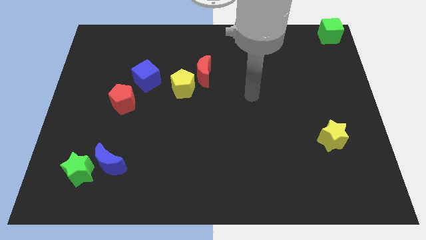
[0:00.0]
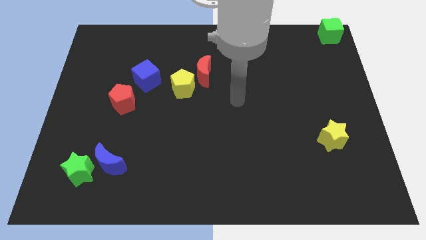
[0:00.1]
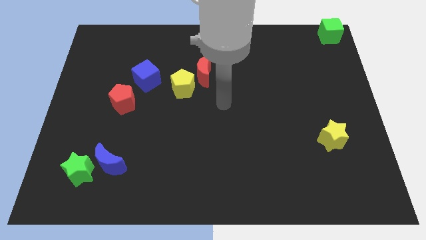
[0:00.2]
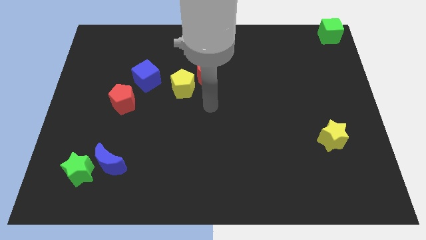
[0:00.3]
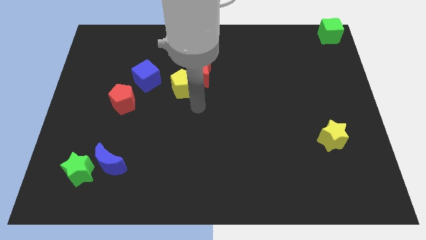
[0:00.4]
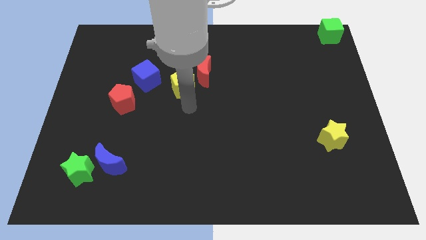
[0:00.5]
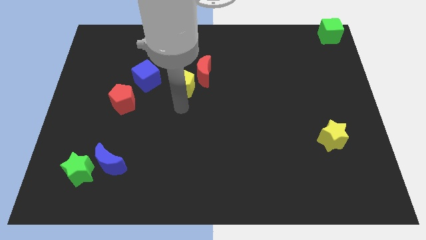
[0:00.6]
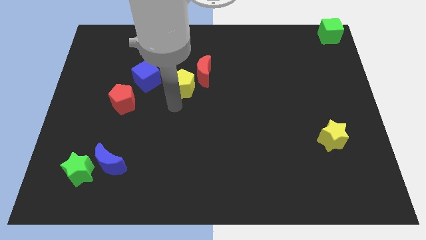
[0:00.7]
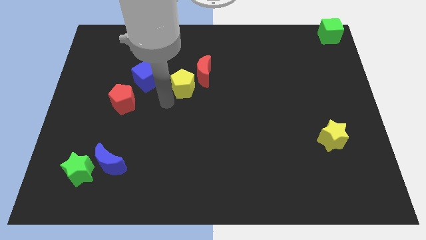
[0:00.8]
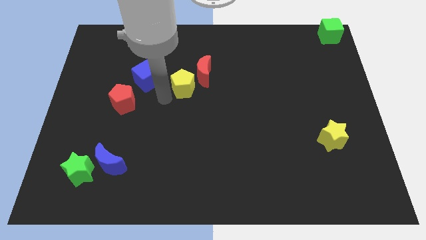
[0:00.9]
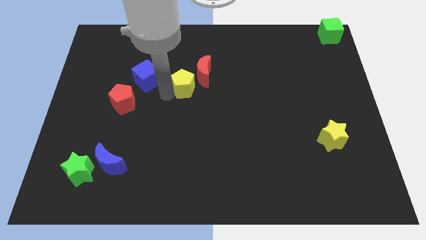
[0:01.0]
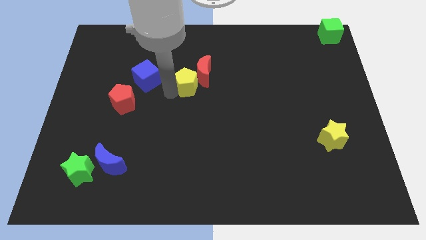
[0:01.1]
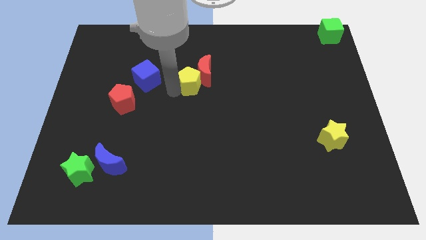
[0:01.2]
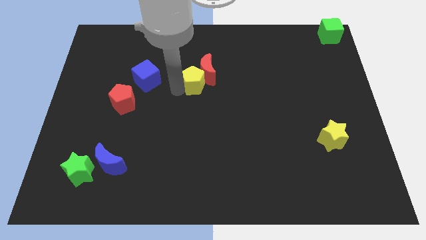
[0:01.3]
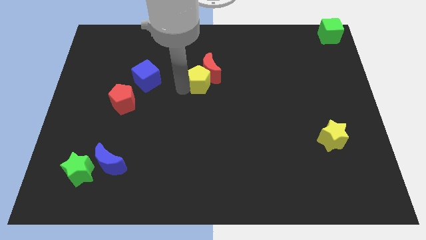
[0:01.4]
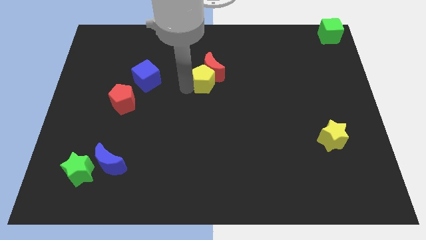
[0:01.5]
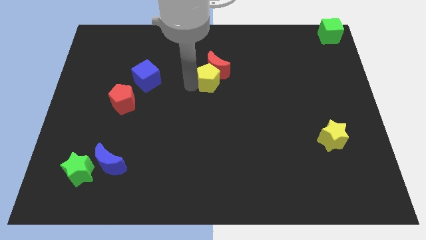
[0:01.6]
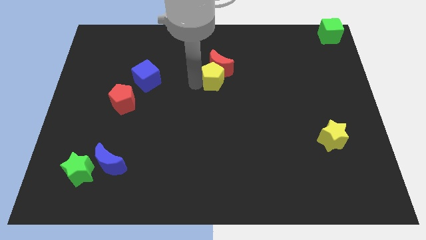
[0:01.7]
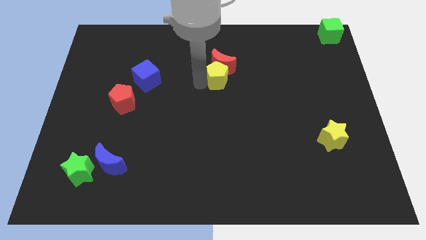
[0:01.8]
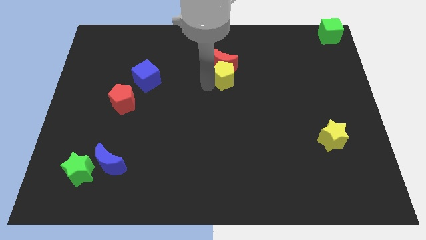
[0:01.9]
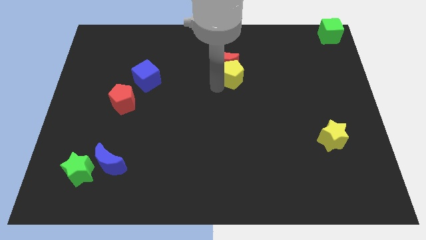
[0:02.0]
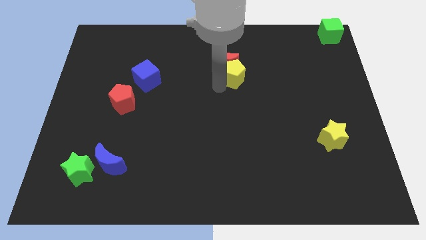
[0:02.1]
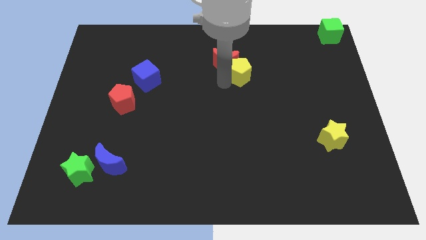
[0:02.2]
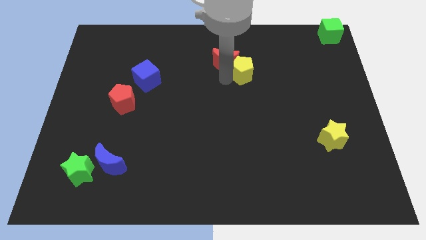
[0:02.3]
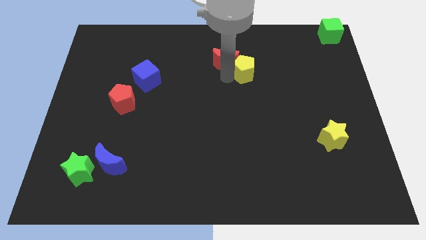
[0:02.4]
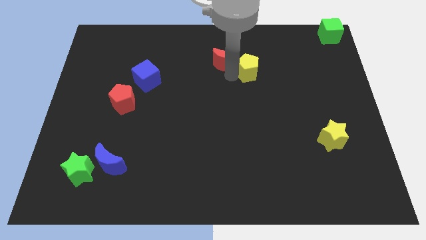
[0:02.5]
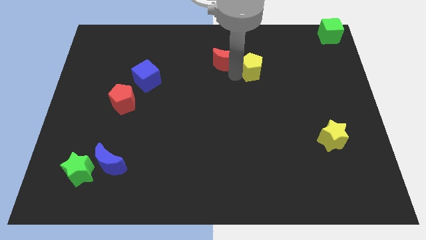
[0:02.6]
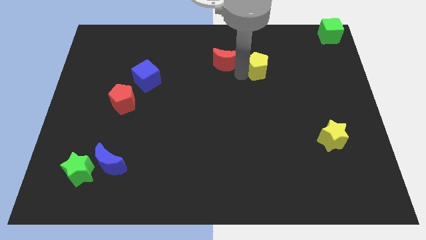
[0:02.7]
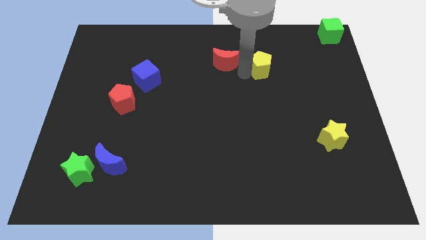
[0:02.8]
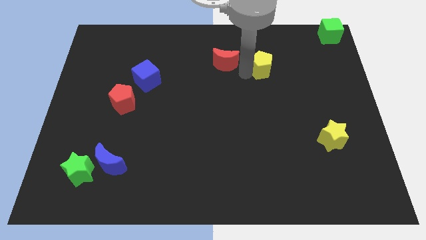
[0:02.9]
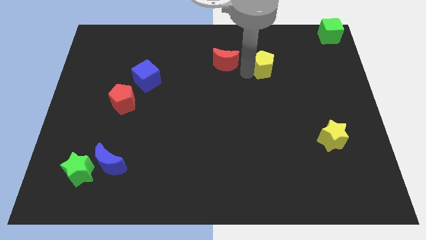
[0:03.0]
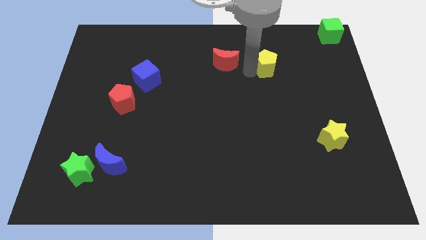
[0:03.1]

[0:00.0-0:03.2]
separate the yellow pentagon and red moon

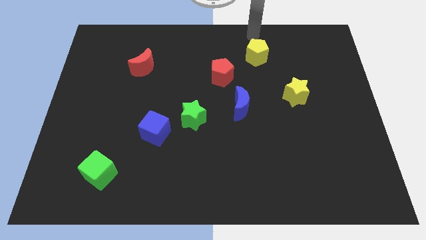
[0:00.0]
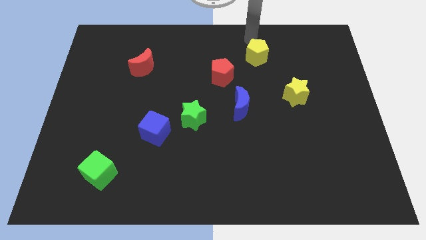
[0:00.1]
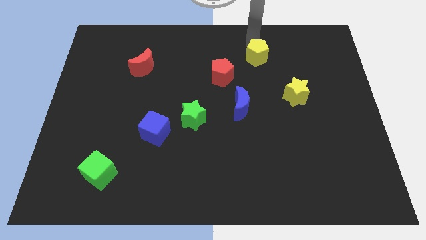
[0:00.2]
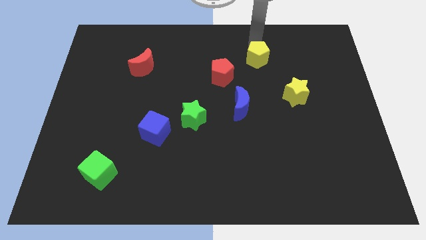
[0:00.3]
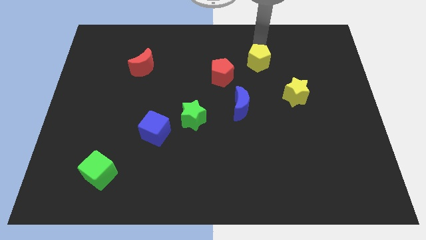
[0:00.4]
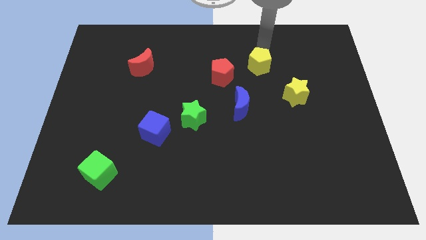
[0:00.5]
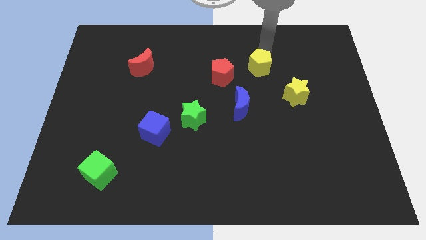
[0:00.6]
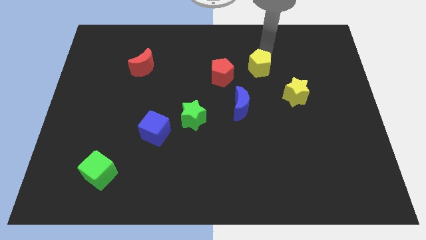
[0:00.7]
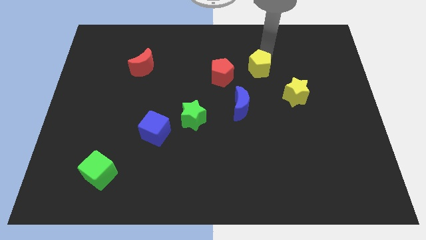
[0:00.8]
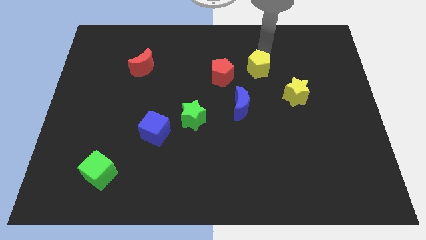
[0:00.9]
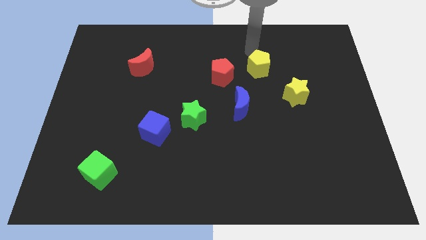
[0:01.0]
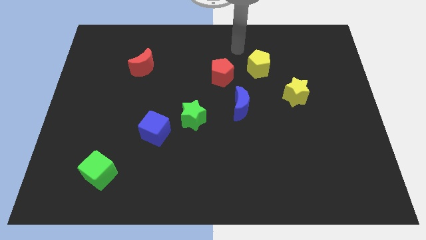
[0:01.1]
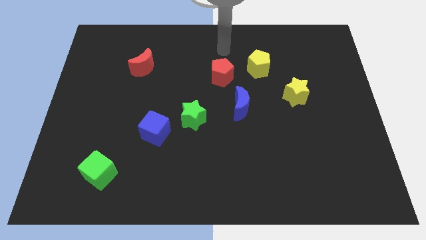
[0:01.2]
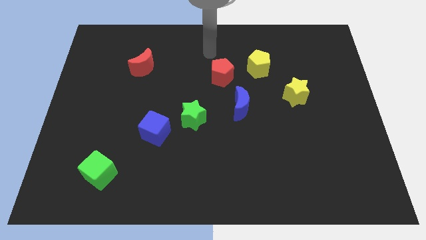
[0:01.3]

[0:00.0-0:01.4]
push yellow pentagon slightly down right to red pentagon on the board

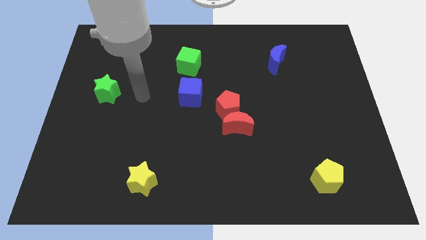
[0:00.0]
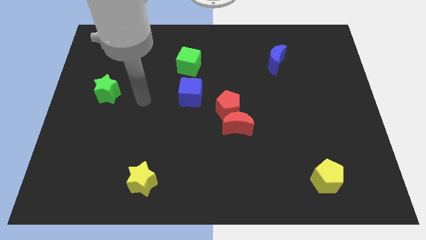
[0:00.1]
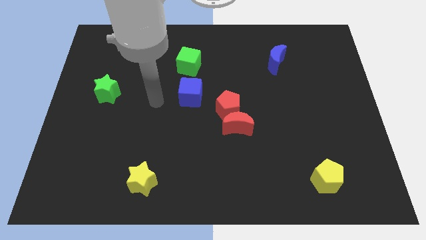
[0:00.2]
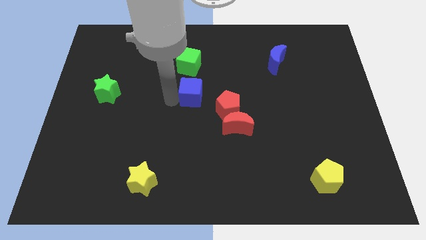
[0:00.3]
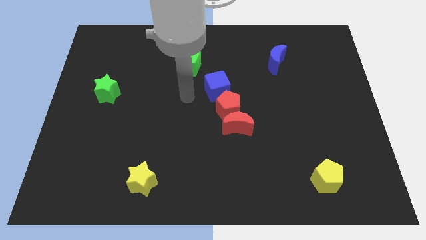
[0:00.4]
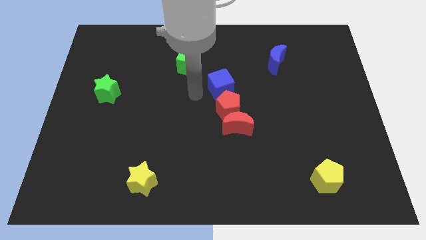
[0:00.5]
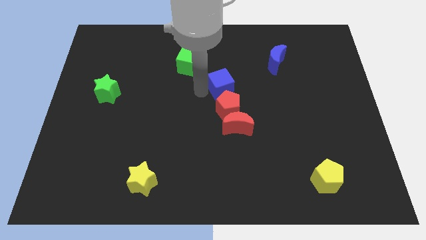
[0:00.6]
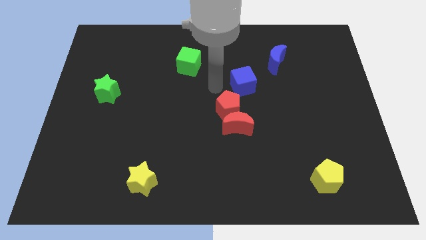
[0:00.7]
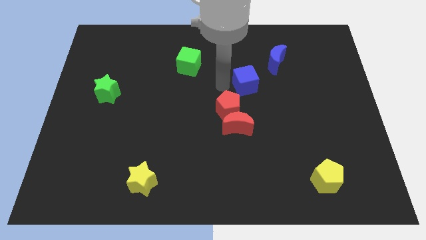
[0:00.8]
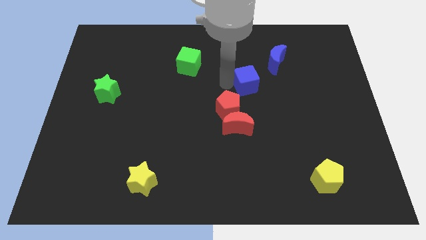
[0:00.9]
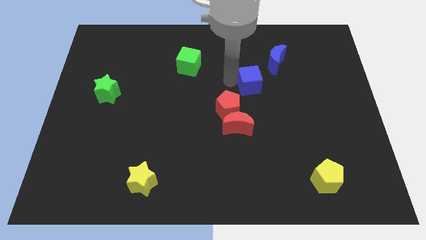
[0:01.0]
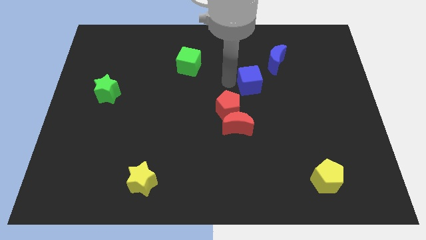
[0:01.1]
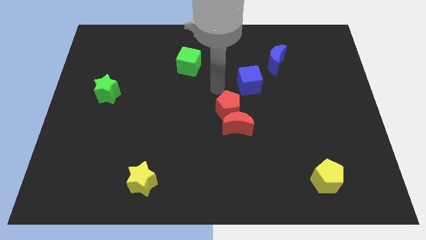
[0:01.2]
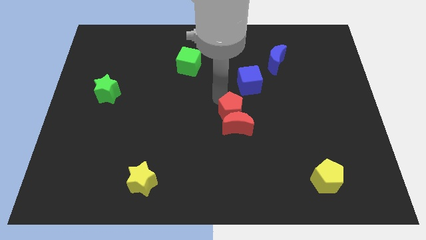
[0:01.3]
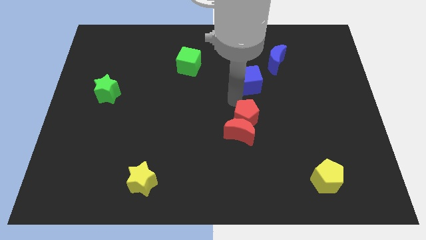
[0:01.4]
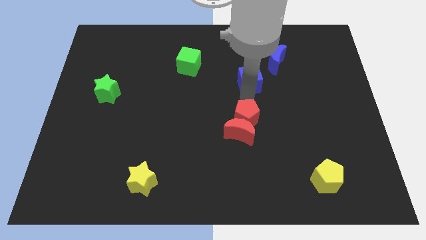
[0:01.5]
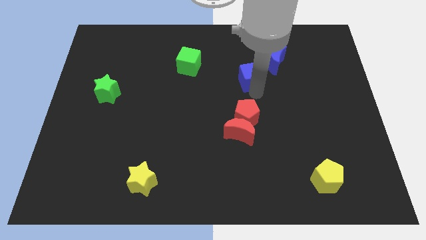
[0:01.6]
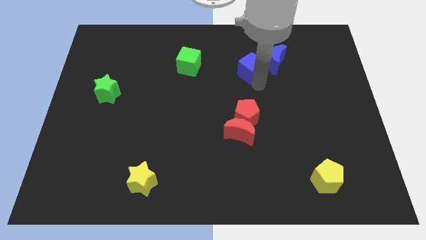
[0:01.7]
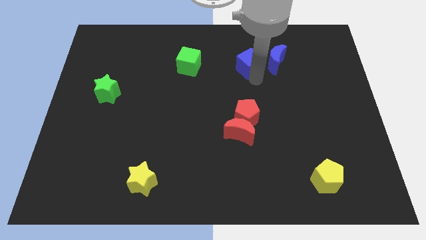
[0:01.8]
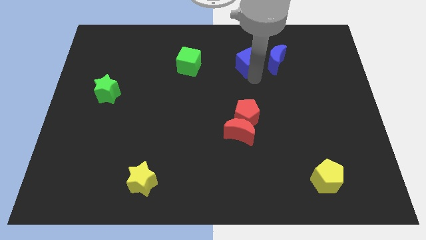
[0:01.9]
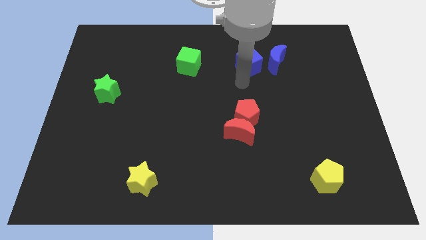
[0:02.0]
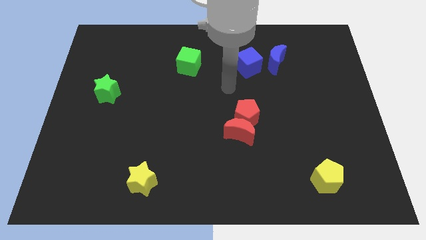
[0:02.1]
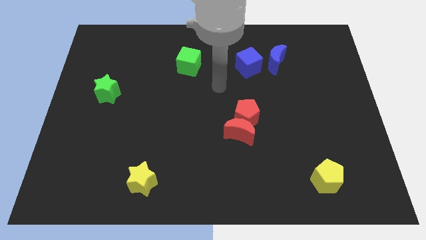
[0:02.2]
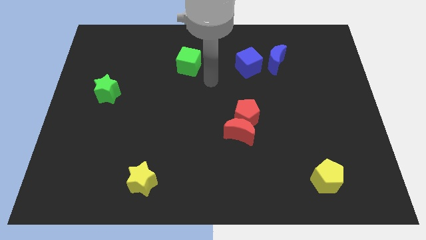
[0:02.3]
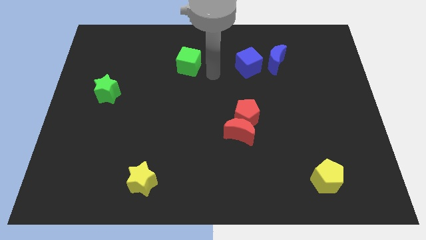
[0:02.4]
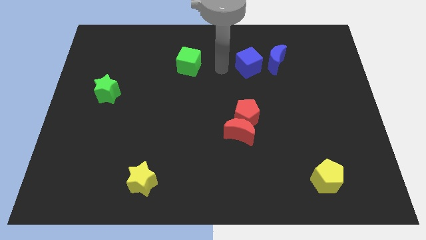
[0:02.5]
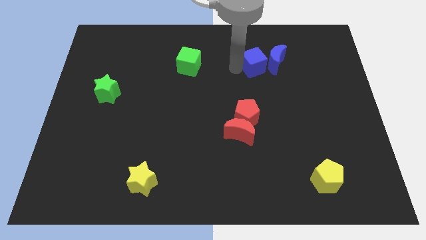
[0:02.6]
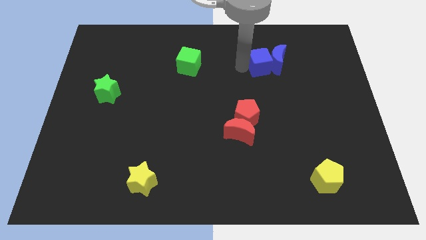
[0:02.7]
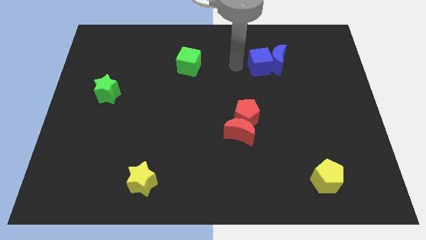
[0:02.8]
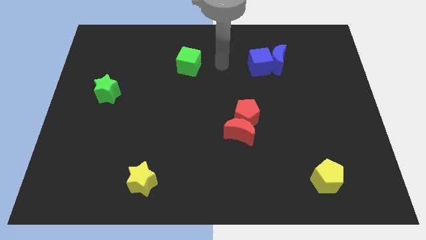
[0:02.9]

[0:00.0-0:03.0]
push the blue cube into the blue moon

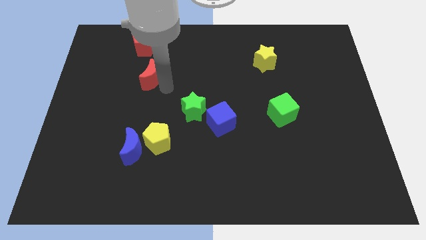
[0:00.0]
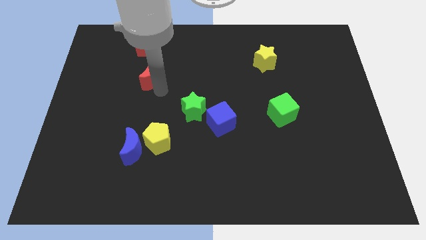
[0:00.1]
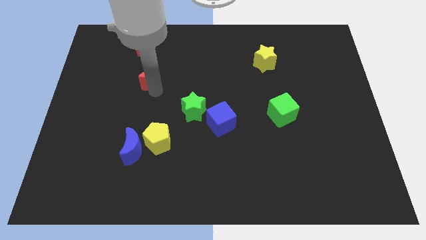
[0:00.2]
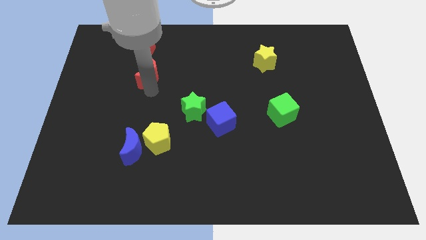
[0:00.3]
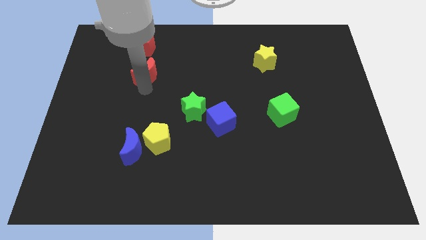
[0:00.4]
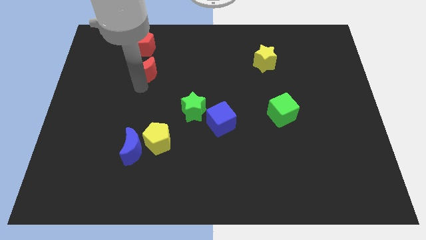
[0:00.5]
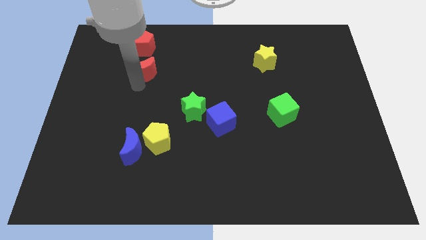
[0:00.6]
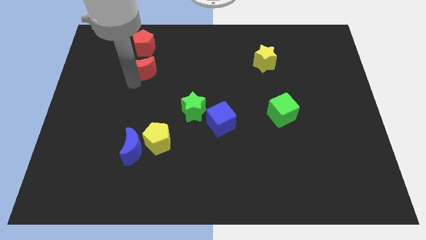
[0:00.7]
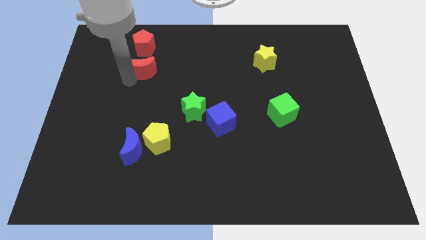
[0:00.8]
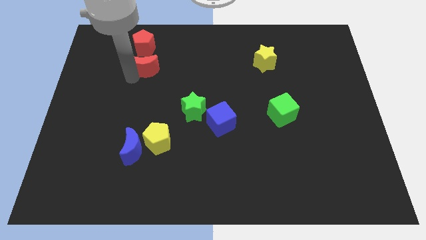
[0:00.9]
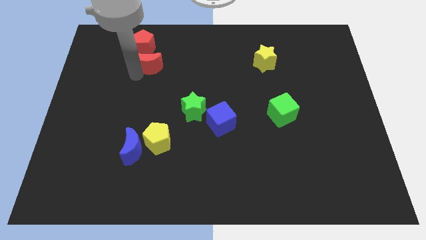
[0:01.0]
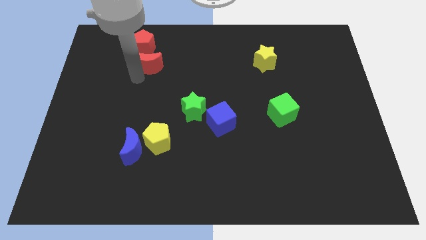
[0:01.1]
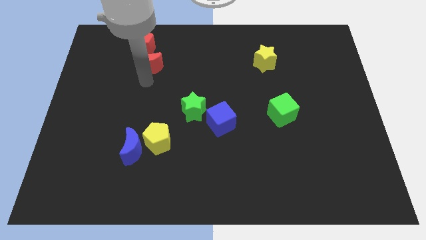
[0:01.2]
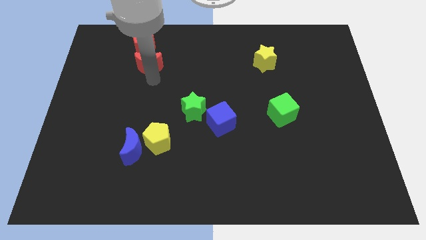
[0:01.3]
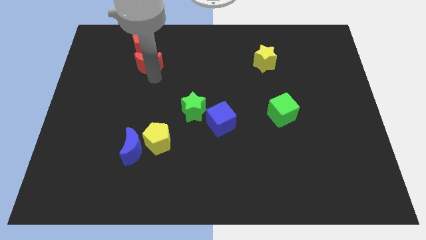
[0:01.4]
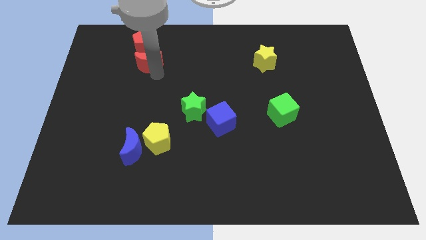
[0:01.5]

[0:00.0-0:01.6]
place the red moon underneath the red pentagon
